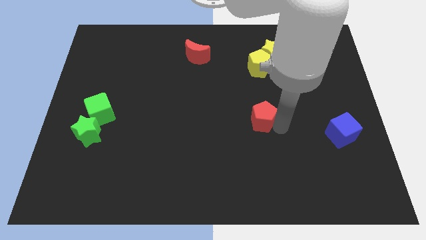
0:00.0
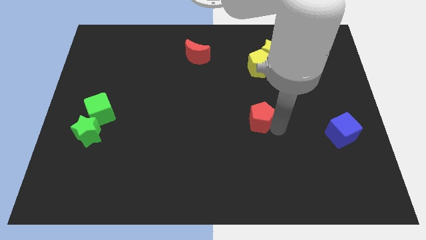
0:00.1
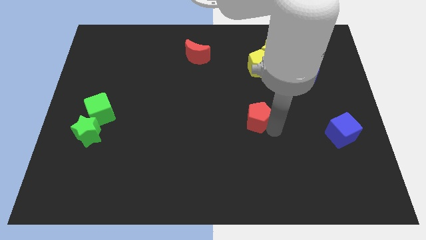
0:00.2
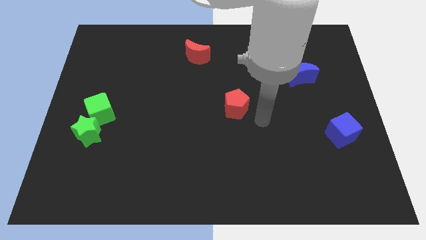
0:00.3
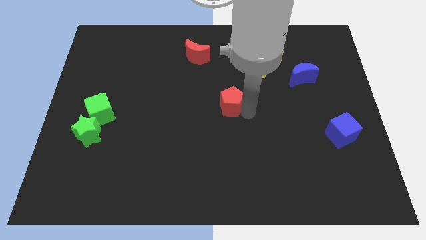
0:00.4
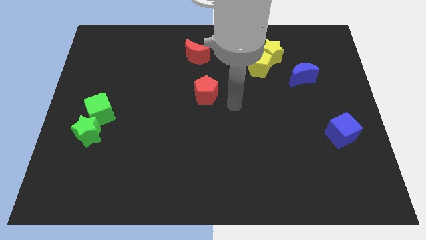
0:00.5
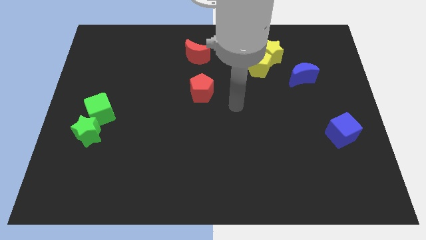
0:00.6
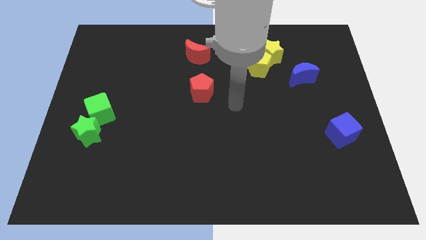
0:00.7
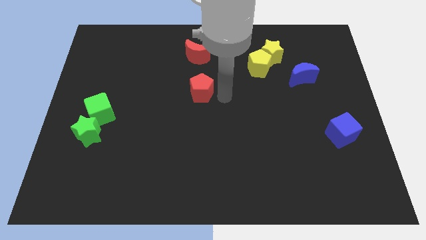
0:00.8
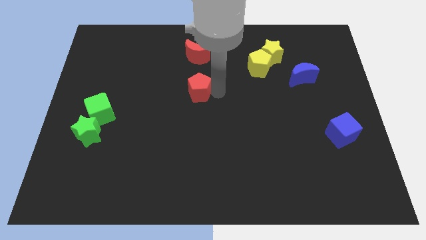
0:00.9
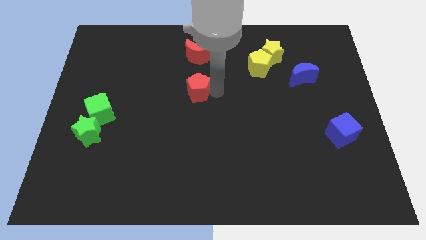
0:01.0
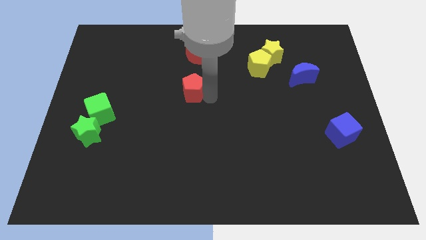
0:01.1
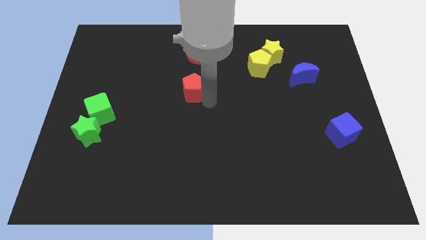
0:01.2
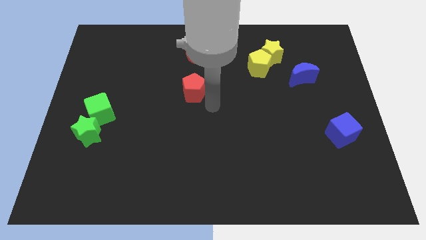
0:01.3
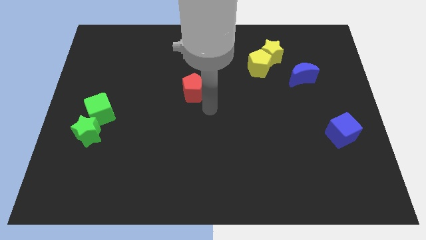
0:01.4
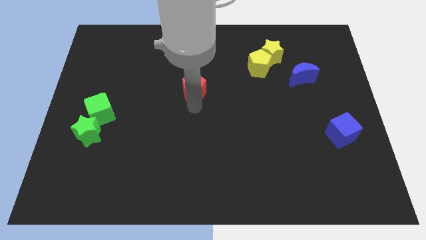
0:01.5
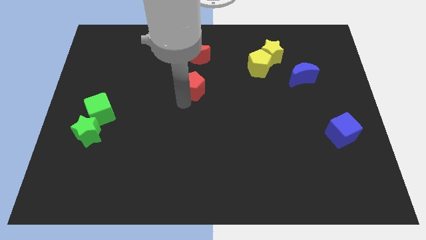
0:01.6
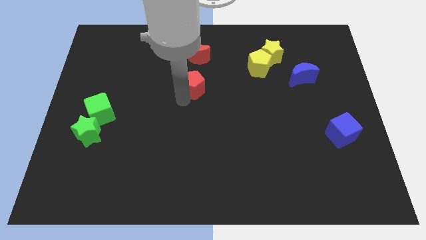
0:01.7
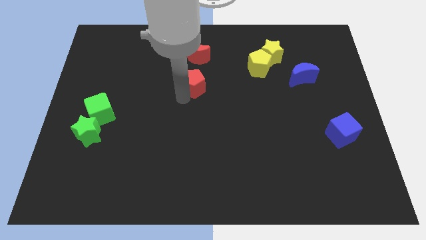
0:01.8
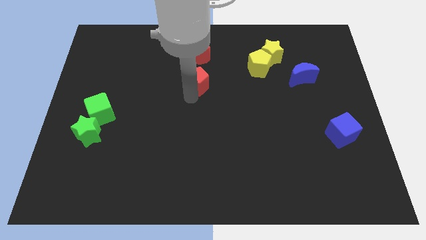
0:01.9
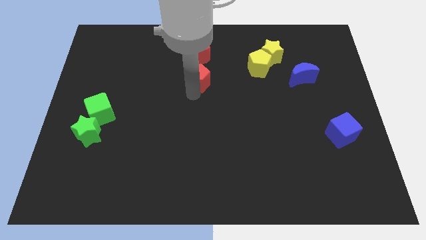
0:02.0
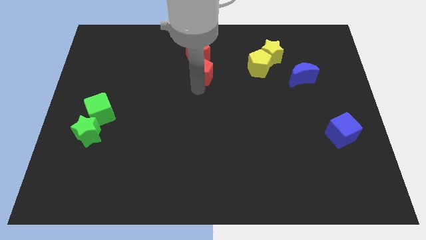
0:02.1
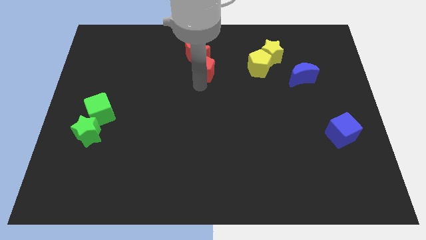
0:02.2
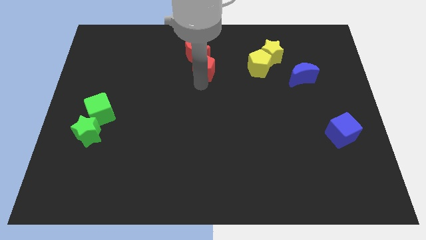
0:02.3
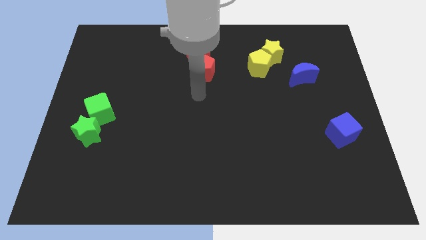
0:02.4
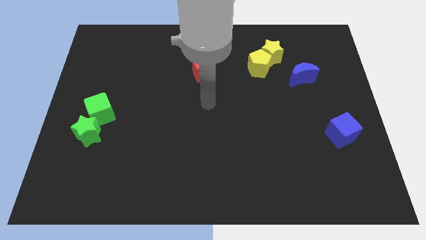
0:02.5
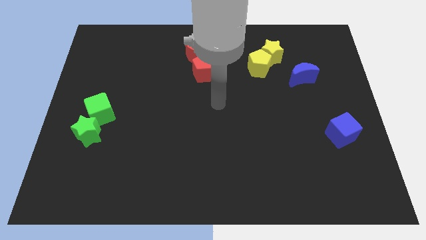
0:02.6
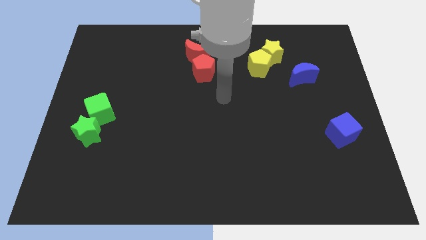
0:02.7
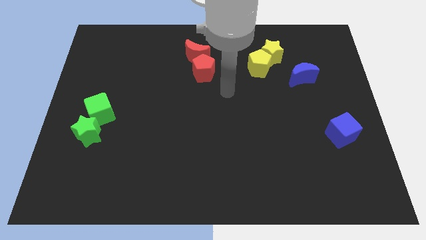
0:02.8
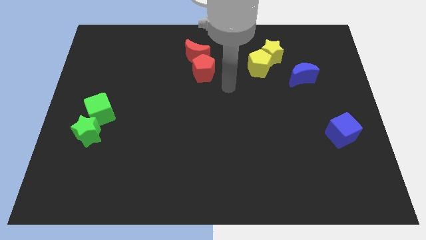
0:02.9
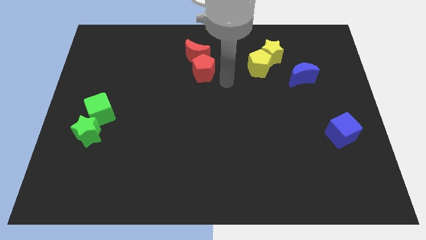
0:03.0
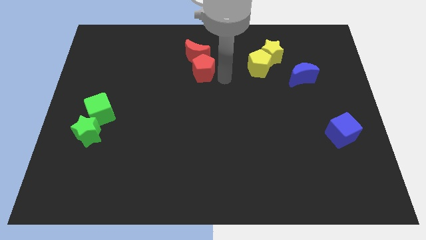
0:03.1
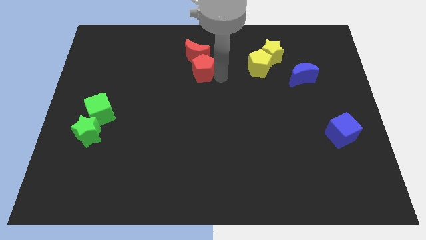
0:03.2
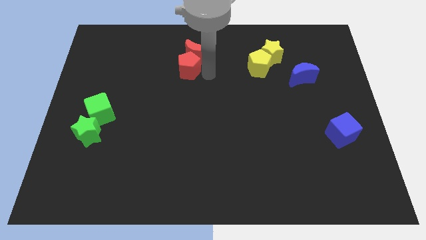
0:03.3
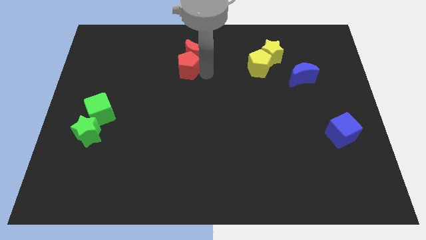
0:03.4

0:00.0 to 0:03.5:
move the red pentagon into the red crescent

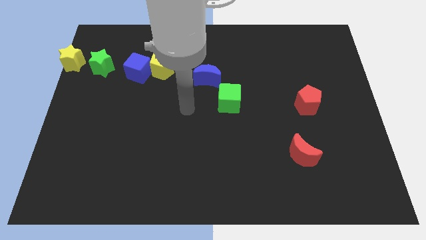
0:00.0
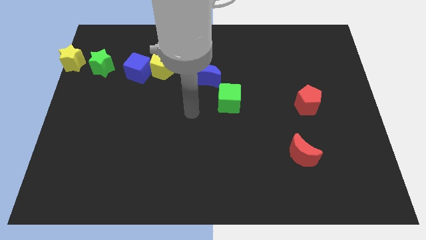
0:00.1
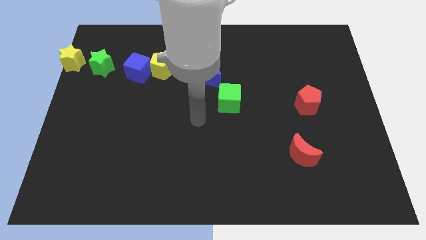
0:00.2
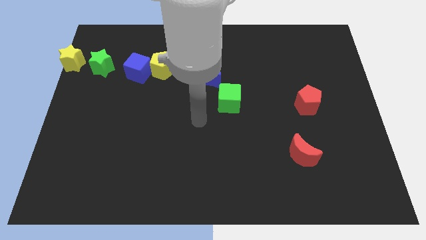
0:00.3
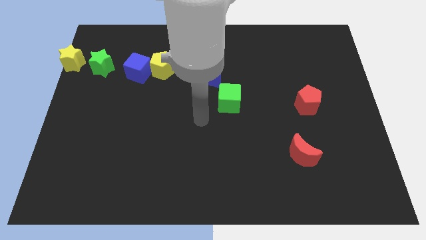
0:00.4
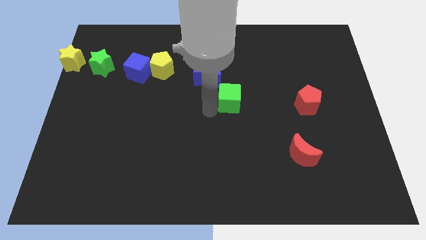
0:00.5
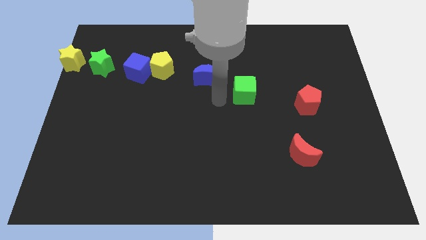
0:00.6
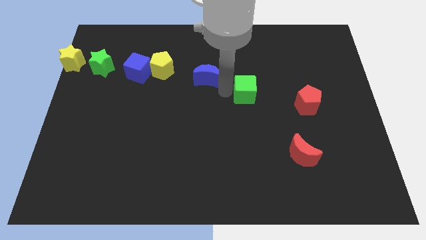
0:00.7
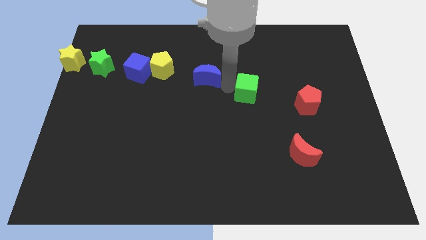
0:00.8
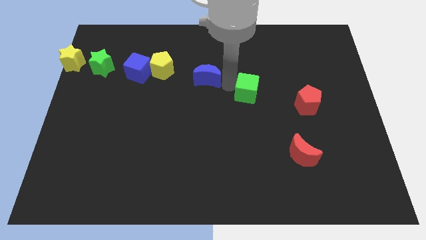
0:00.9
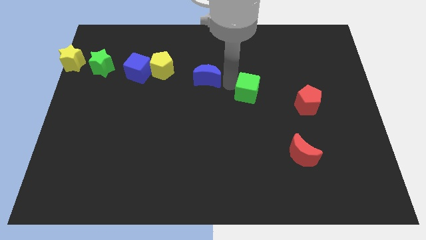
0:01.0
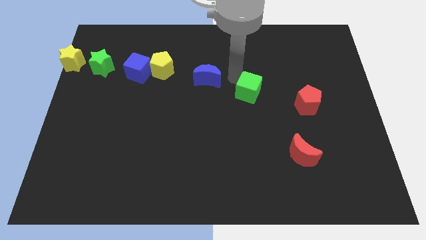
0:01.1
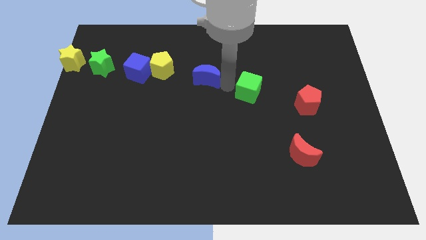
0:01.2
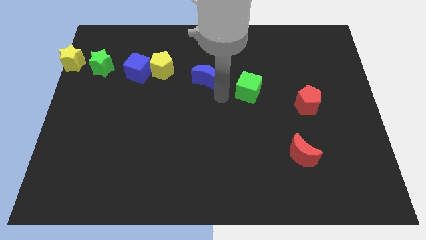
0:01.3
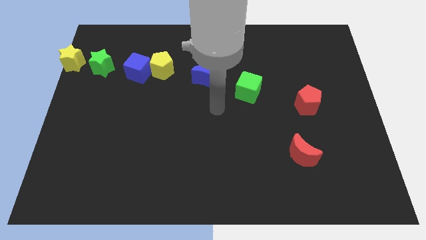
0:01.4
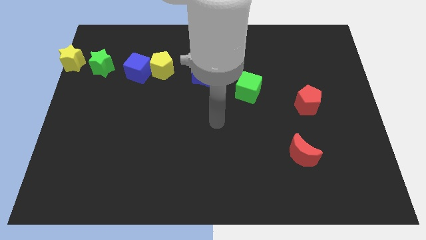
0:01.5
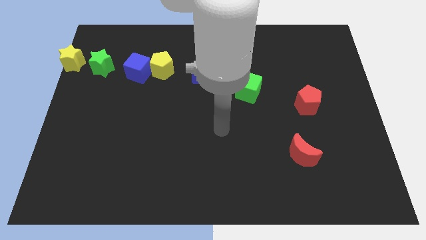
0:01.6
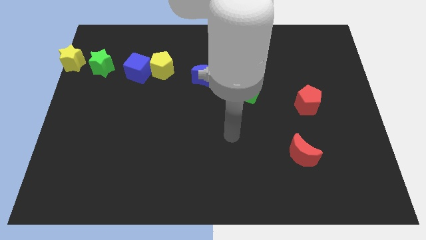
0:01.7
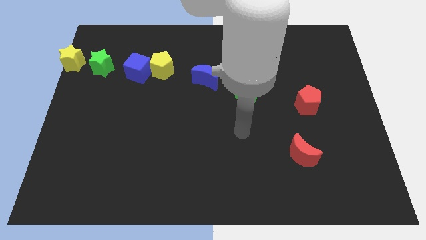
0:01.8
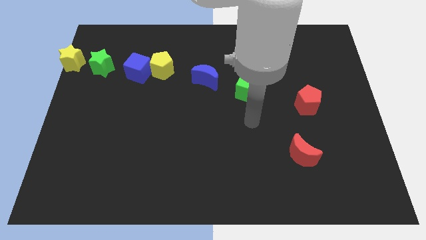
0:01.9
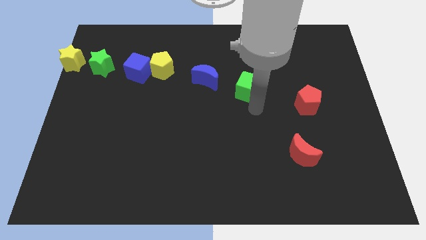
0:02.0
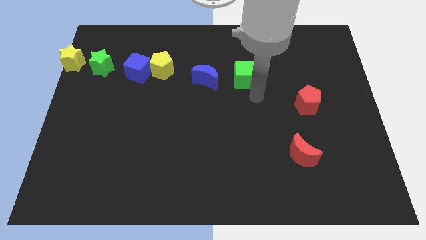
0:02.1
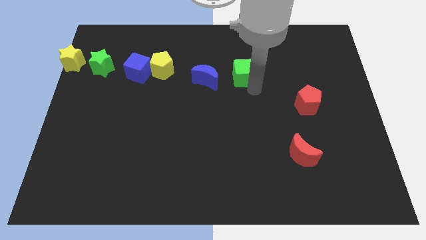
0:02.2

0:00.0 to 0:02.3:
move the green cube to the right of the blue crescent

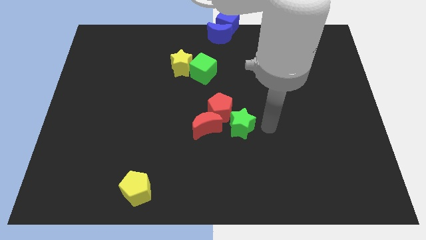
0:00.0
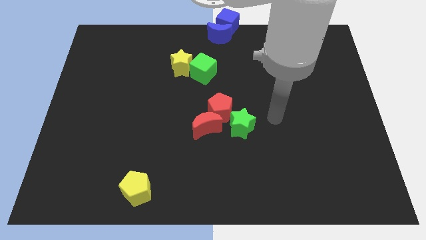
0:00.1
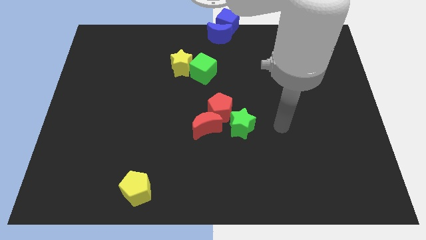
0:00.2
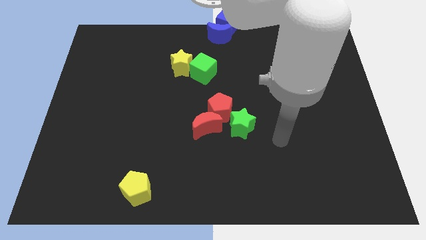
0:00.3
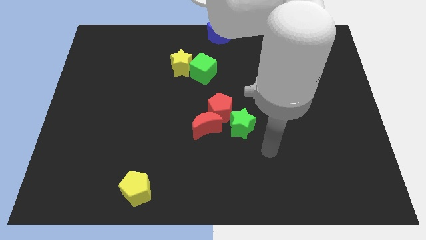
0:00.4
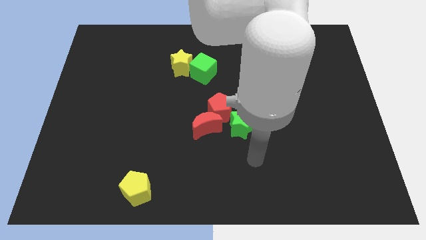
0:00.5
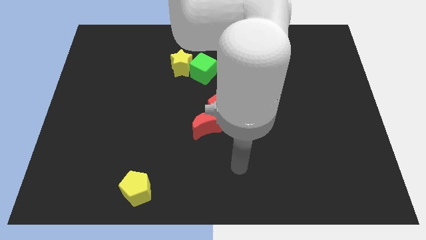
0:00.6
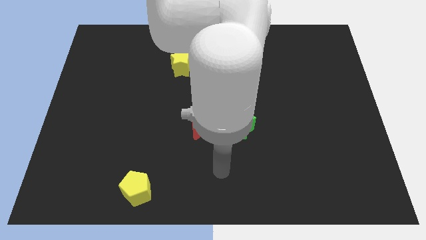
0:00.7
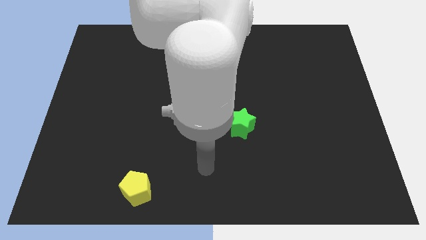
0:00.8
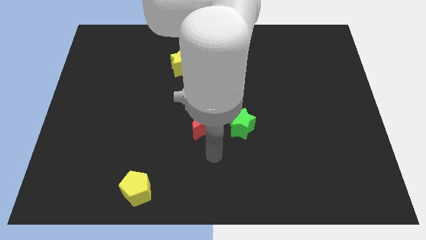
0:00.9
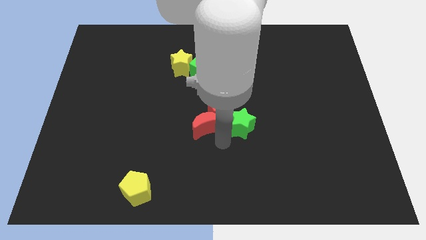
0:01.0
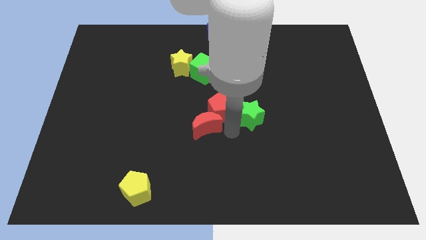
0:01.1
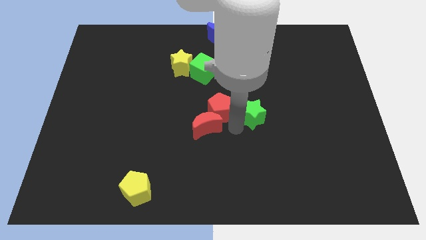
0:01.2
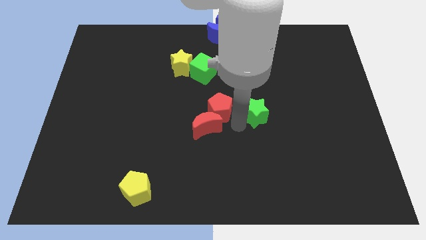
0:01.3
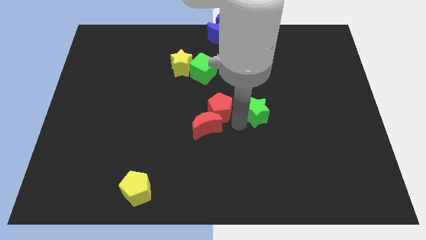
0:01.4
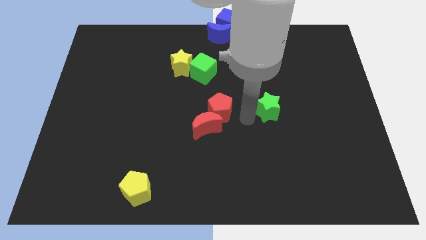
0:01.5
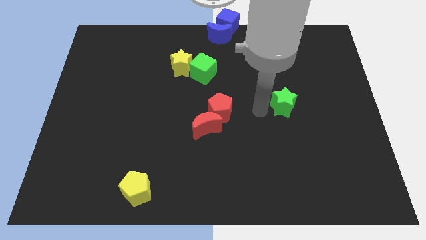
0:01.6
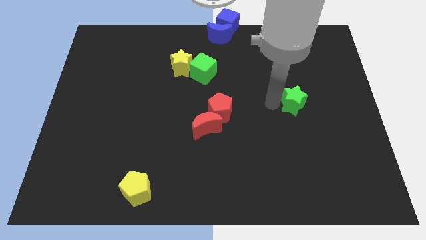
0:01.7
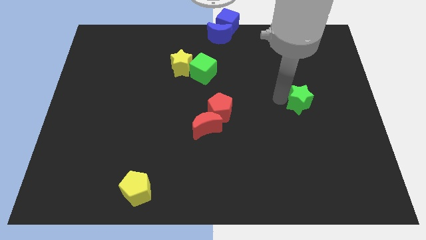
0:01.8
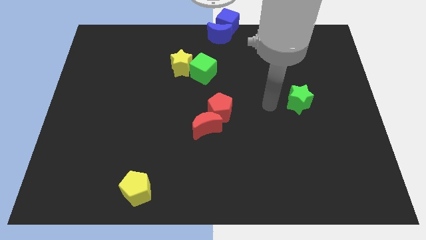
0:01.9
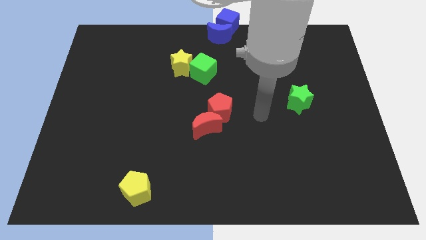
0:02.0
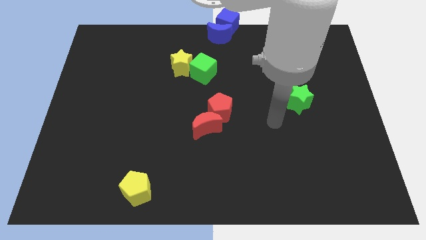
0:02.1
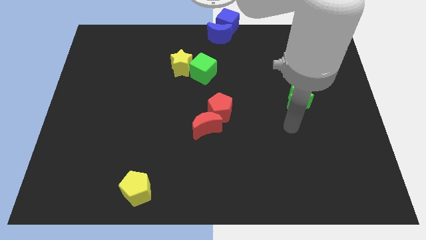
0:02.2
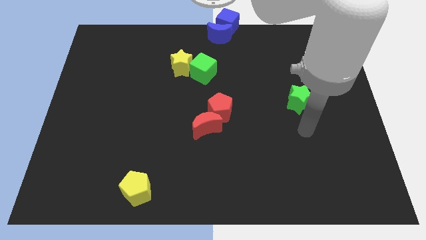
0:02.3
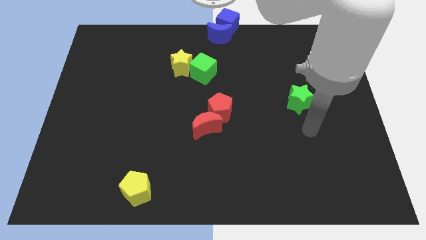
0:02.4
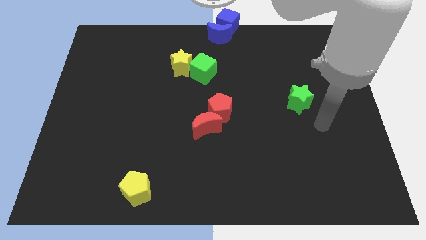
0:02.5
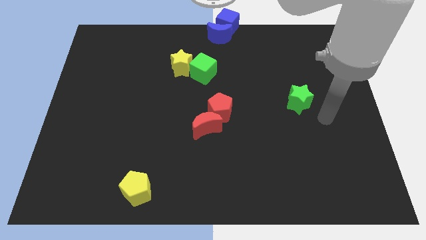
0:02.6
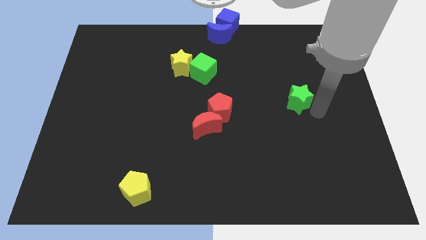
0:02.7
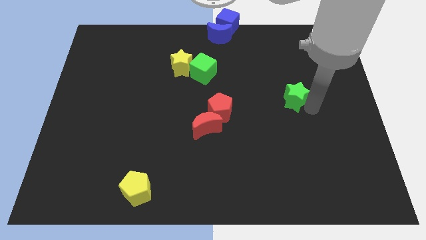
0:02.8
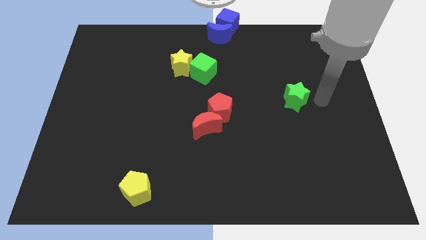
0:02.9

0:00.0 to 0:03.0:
separate green star from red blocks

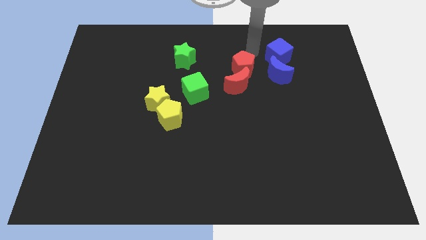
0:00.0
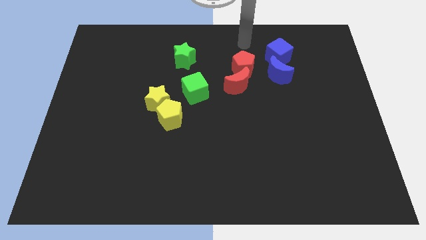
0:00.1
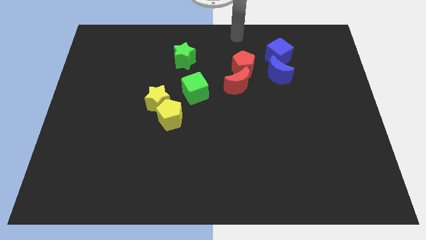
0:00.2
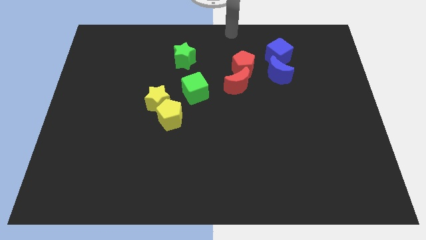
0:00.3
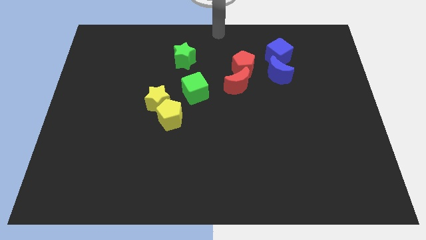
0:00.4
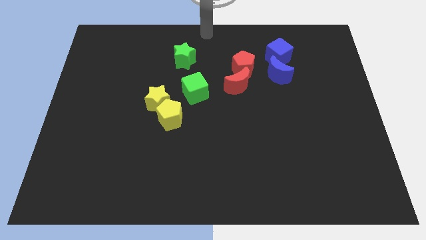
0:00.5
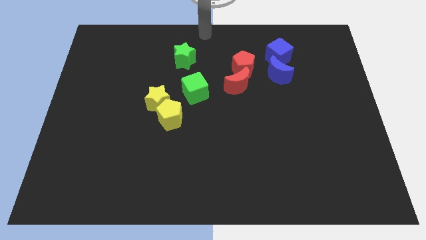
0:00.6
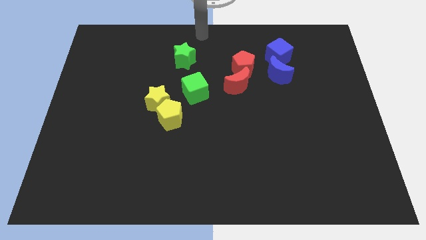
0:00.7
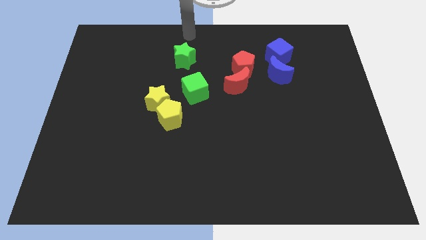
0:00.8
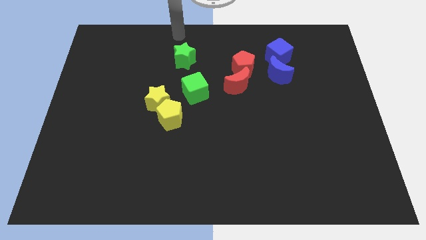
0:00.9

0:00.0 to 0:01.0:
place your arm at the top of the green star
